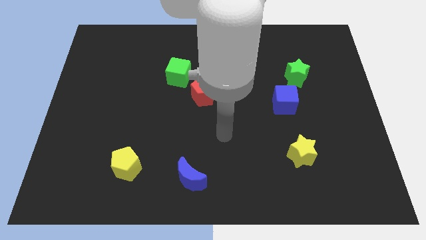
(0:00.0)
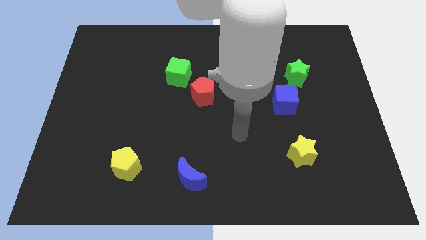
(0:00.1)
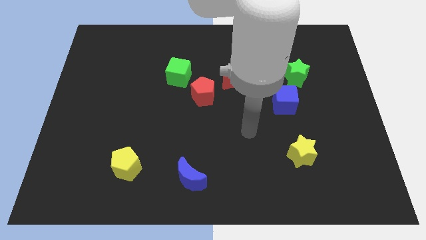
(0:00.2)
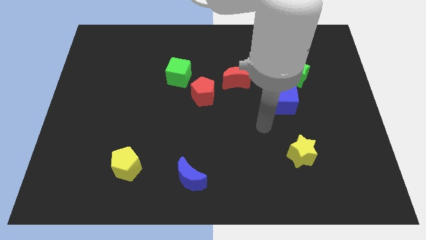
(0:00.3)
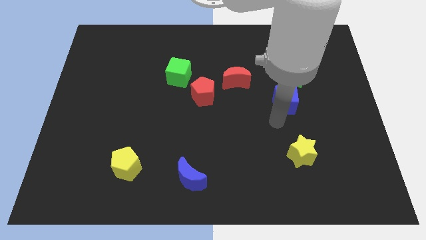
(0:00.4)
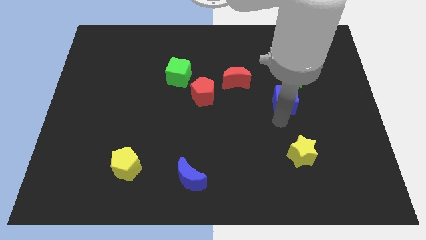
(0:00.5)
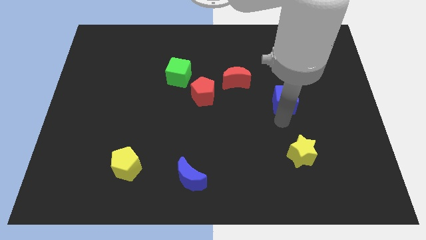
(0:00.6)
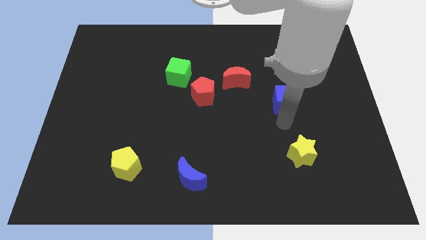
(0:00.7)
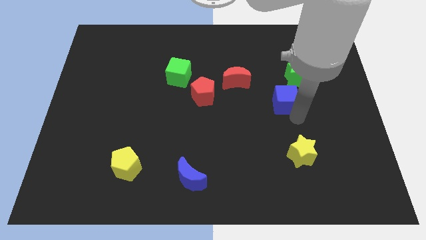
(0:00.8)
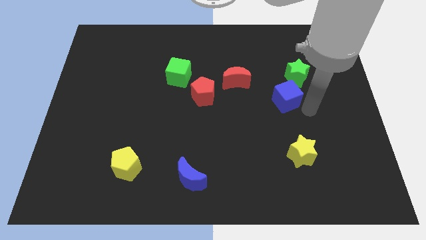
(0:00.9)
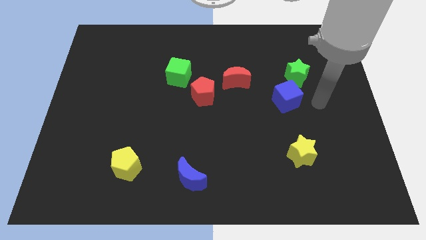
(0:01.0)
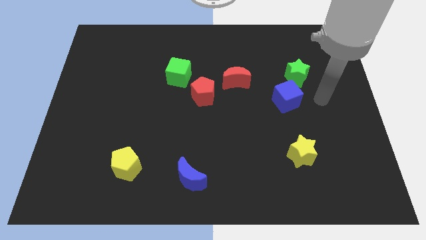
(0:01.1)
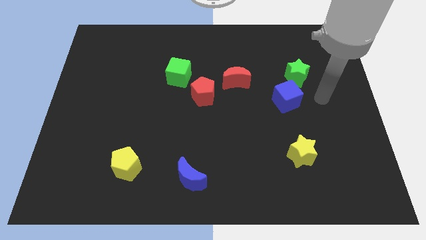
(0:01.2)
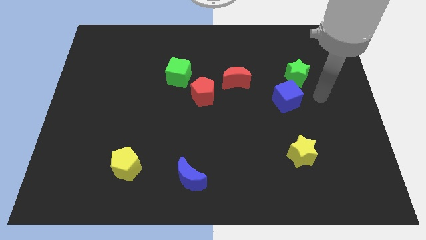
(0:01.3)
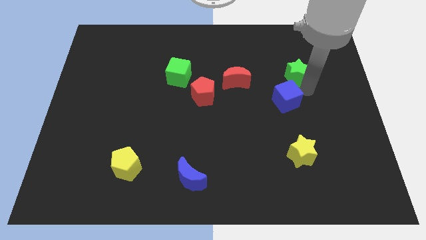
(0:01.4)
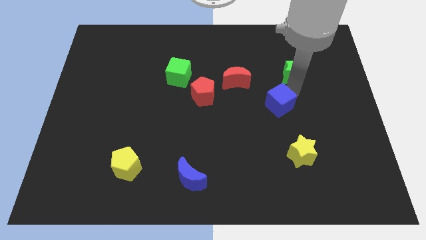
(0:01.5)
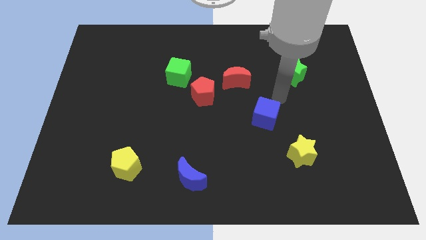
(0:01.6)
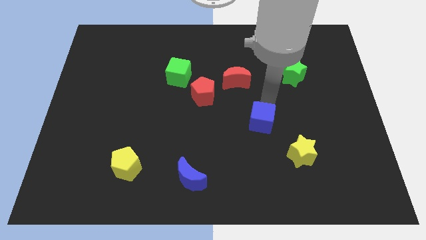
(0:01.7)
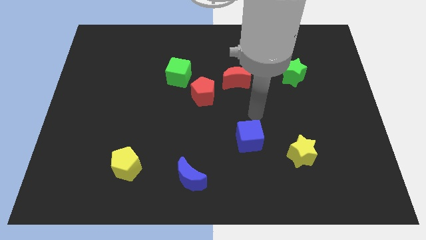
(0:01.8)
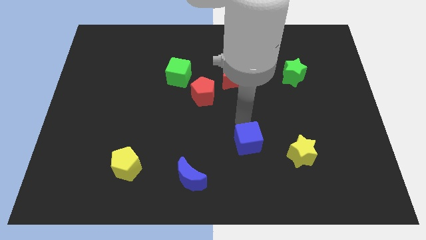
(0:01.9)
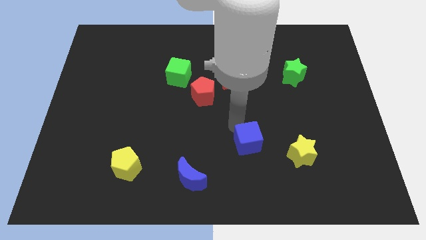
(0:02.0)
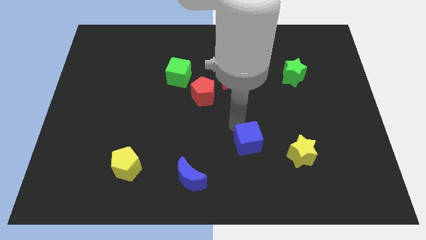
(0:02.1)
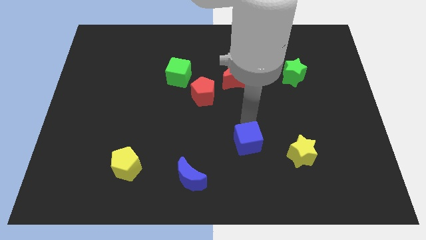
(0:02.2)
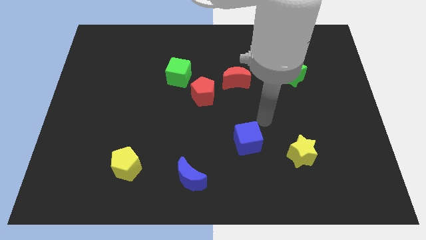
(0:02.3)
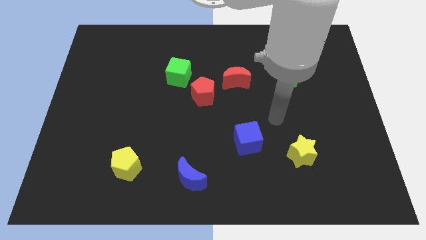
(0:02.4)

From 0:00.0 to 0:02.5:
move the belue cube diagonal between yellow star and blue moon

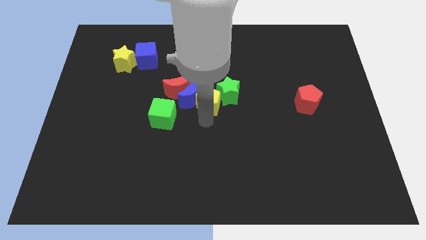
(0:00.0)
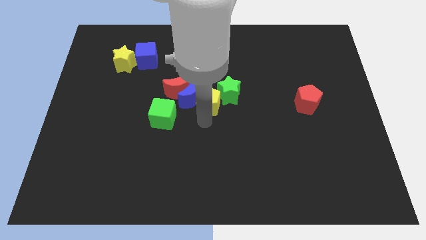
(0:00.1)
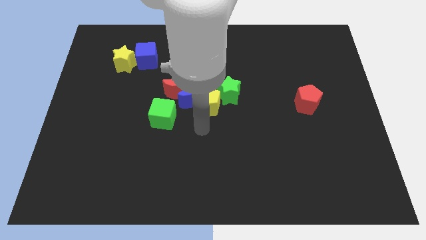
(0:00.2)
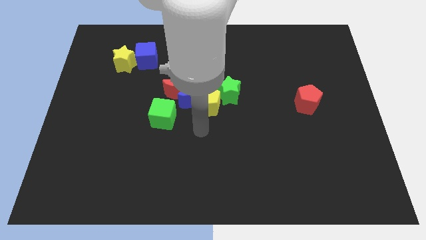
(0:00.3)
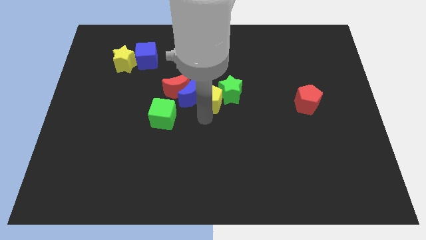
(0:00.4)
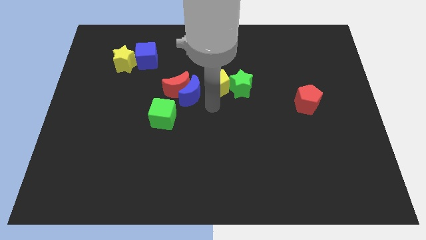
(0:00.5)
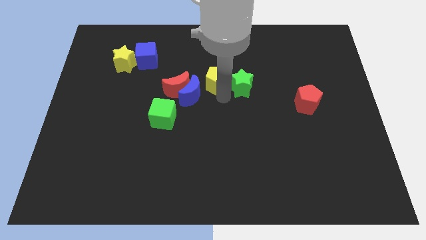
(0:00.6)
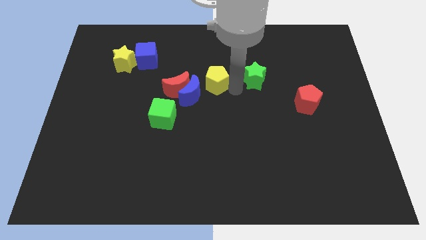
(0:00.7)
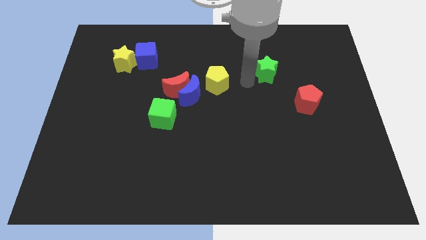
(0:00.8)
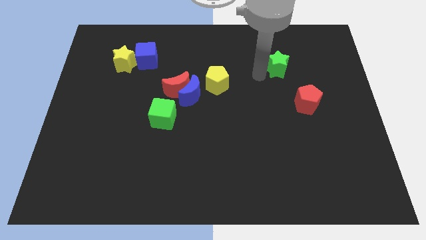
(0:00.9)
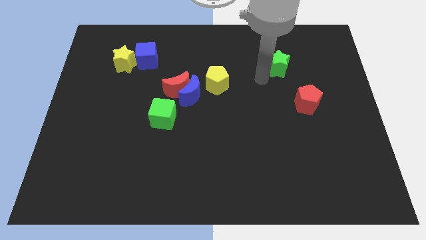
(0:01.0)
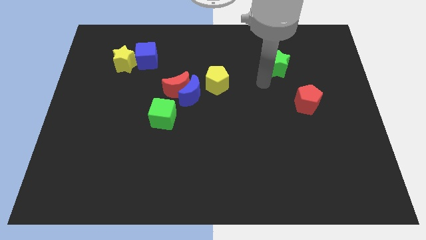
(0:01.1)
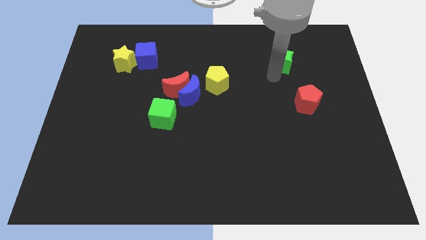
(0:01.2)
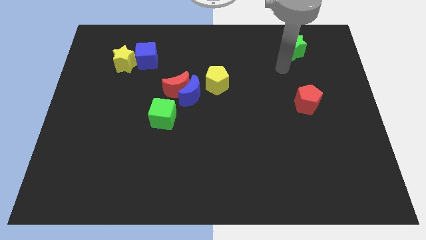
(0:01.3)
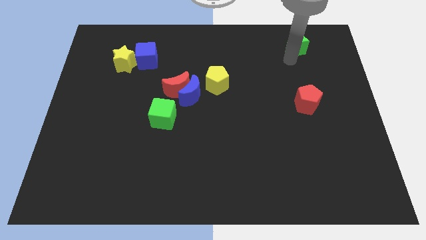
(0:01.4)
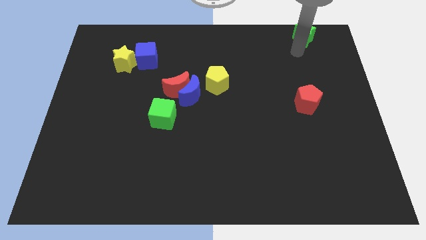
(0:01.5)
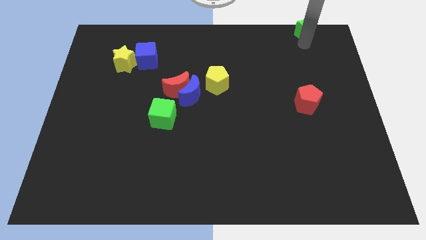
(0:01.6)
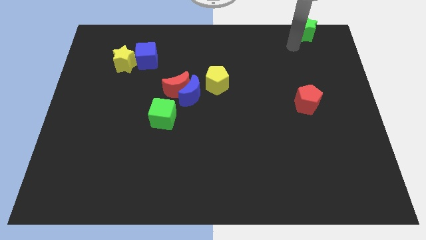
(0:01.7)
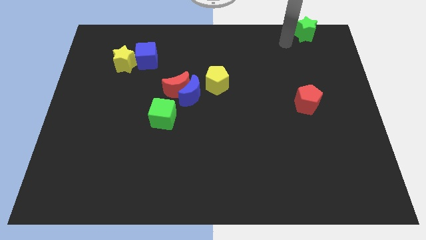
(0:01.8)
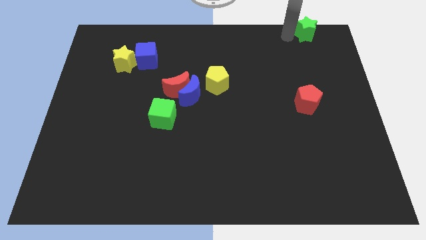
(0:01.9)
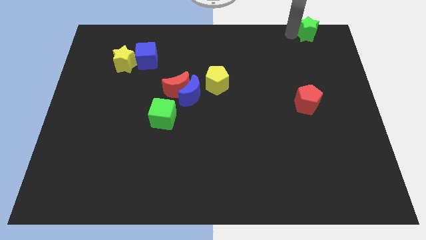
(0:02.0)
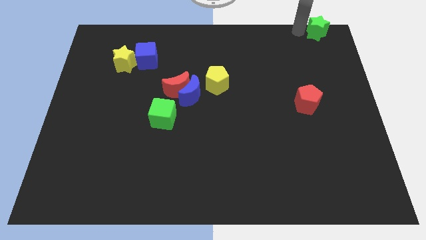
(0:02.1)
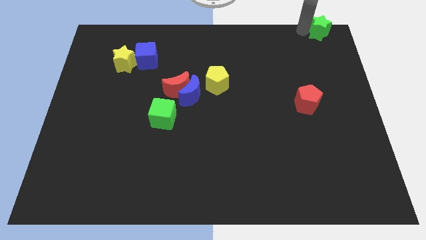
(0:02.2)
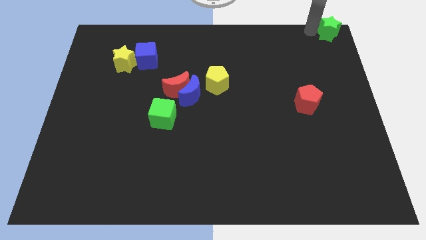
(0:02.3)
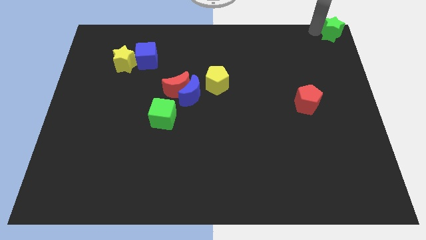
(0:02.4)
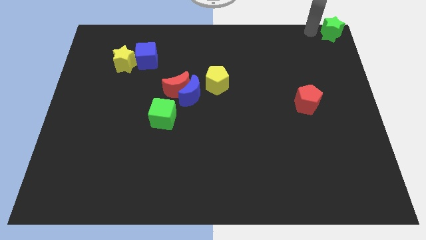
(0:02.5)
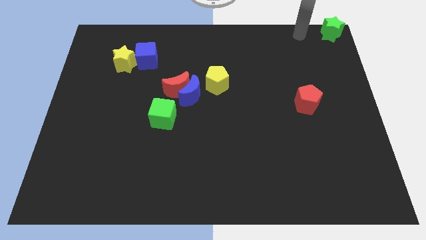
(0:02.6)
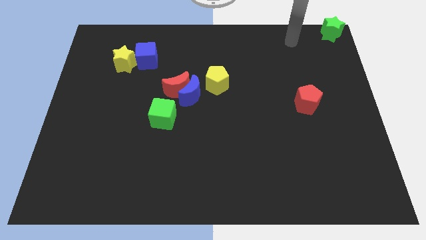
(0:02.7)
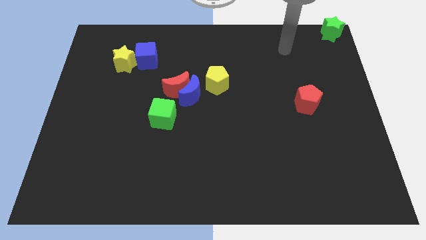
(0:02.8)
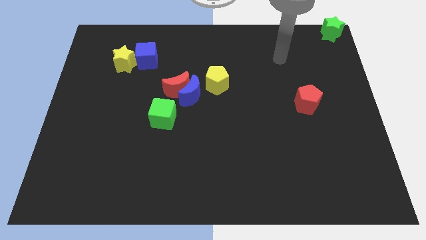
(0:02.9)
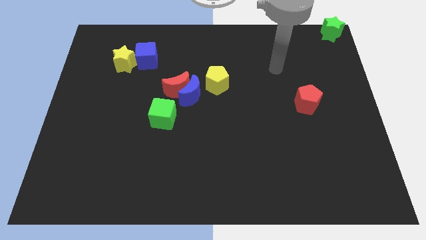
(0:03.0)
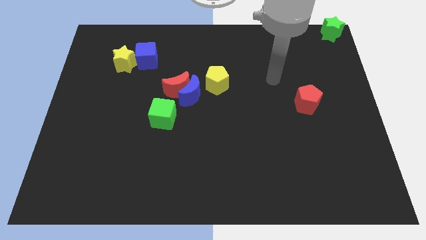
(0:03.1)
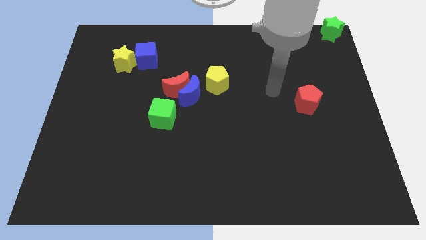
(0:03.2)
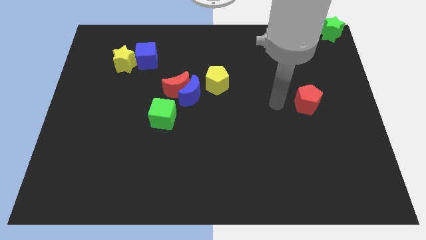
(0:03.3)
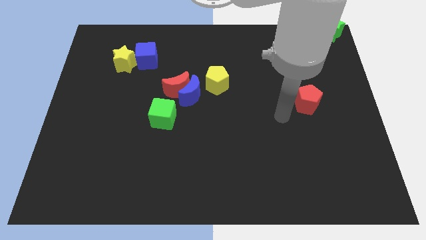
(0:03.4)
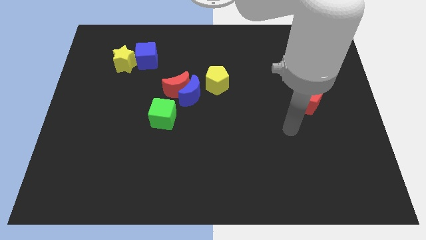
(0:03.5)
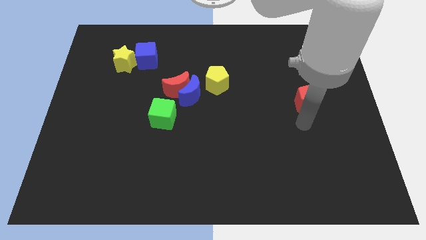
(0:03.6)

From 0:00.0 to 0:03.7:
separate the green star from the group of blocks

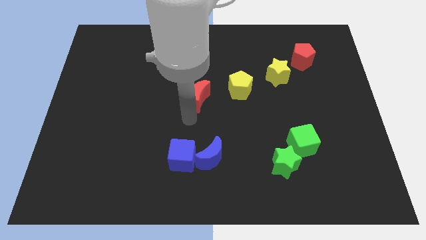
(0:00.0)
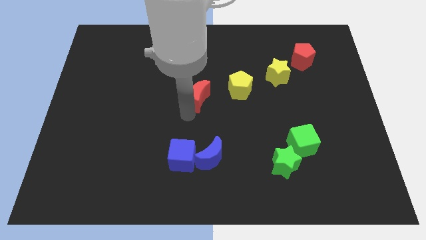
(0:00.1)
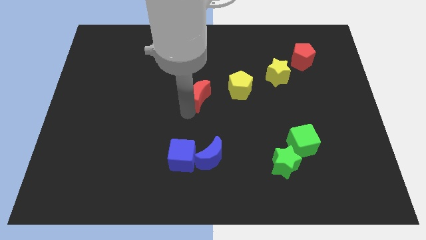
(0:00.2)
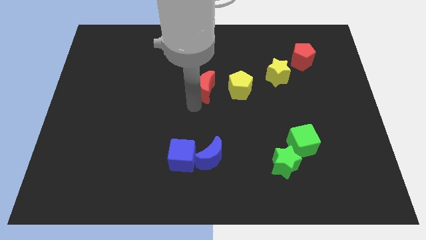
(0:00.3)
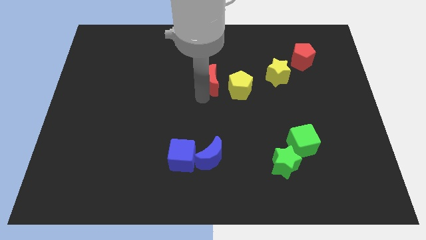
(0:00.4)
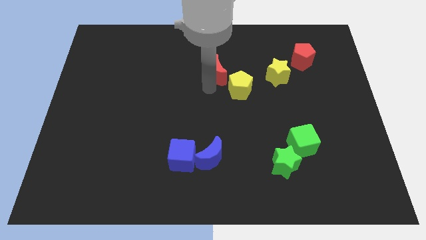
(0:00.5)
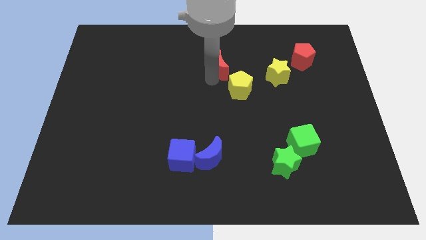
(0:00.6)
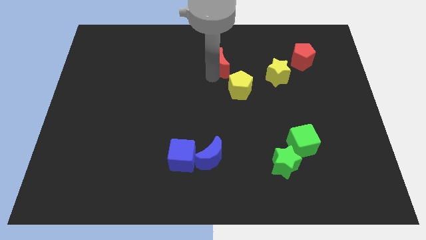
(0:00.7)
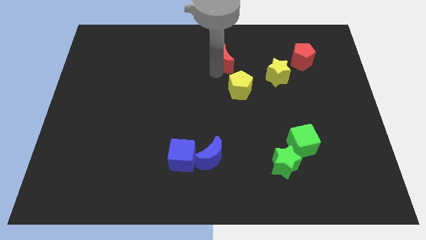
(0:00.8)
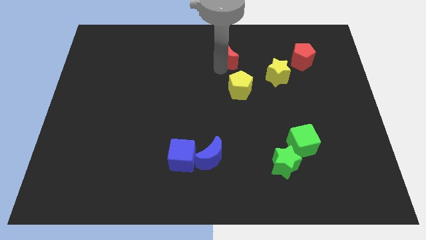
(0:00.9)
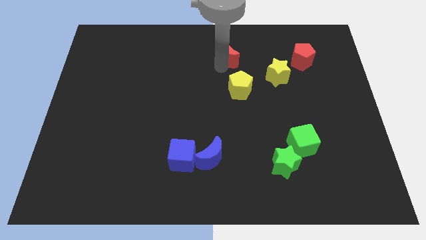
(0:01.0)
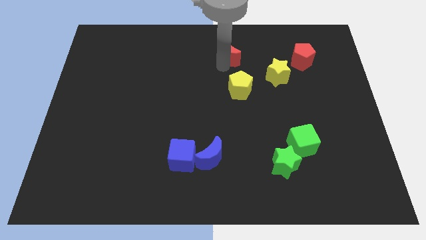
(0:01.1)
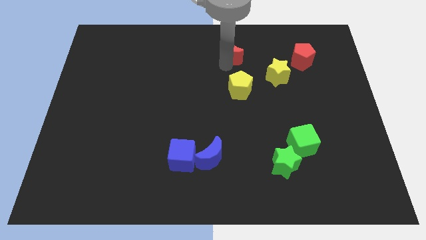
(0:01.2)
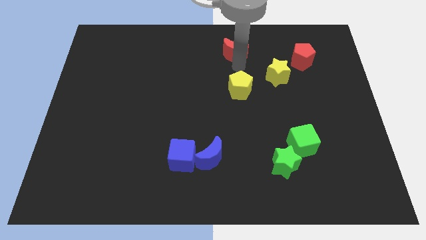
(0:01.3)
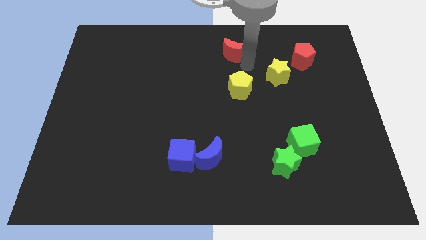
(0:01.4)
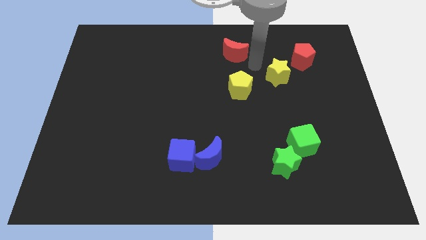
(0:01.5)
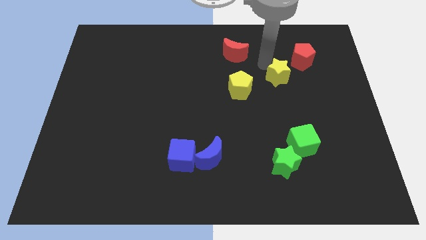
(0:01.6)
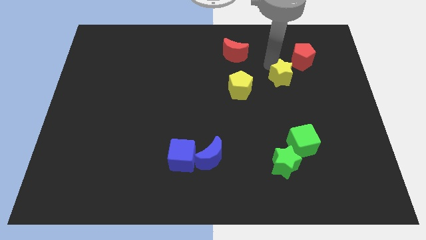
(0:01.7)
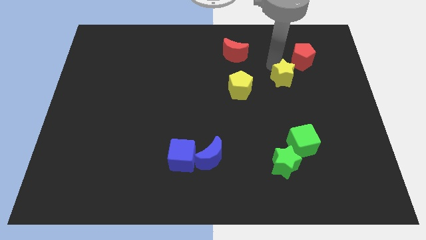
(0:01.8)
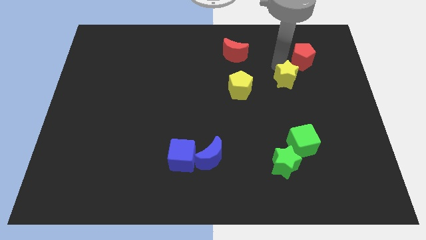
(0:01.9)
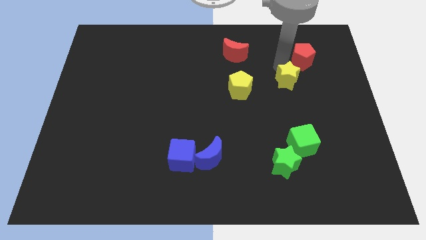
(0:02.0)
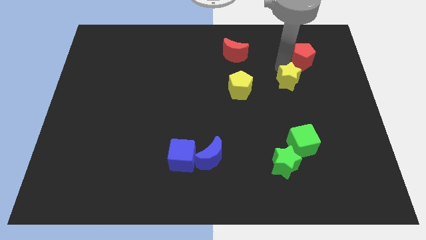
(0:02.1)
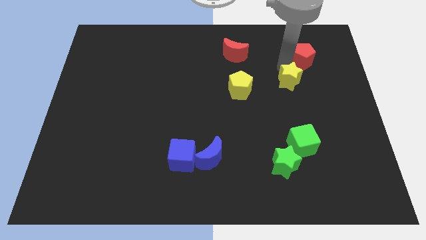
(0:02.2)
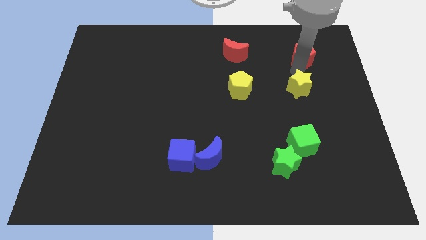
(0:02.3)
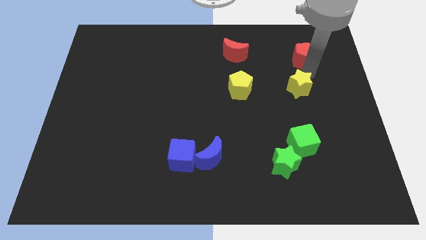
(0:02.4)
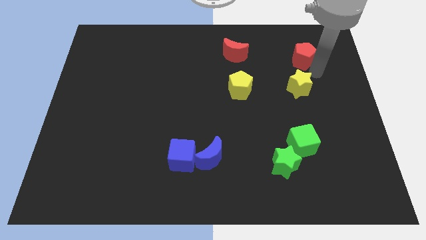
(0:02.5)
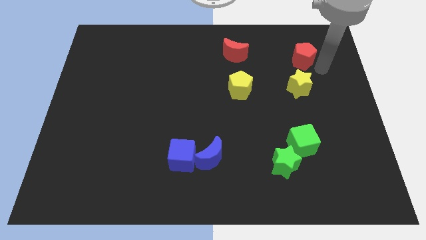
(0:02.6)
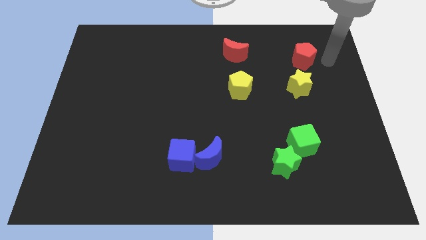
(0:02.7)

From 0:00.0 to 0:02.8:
slightly touch down to the red pentagon
